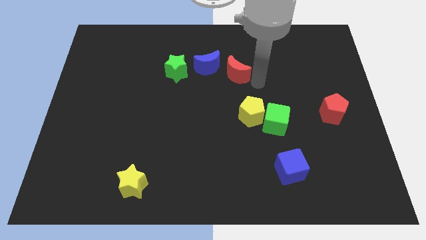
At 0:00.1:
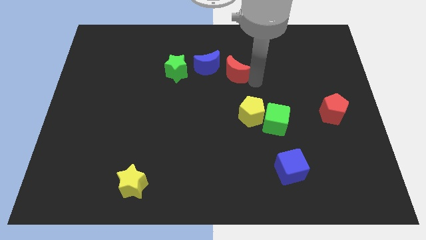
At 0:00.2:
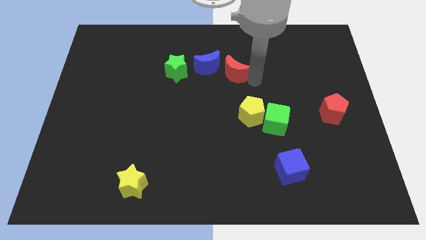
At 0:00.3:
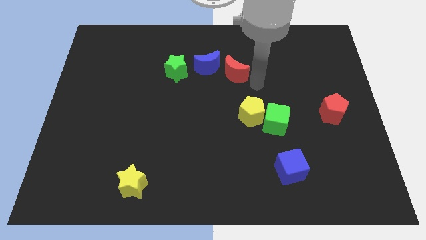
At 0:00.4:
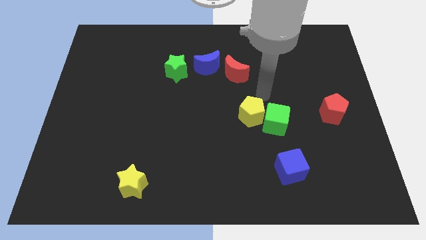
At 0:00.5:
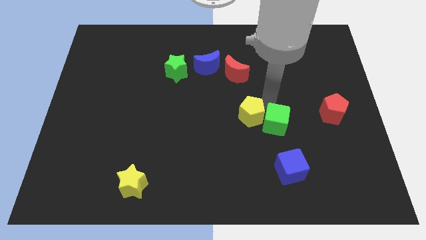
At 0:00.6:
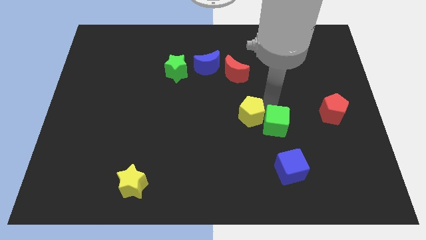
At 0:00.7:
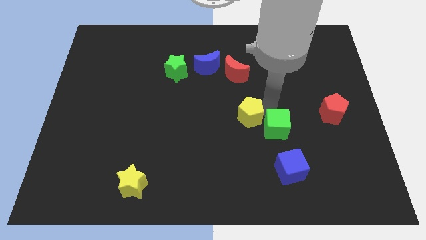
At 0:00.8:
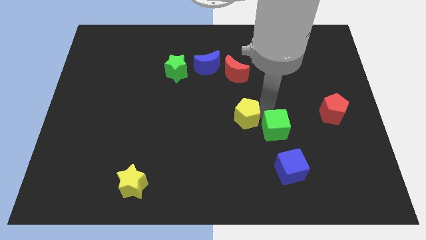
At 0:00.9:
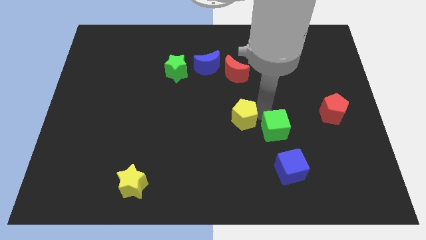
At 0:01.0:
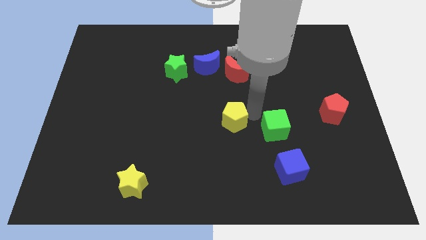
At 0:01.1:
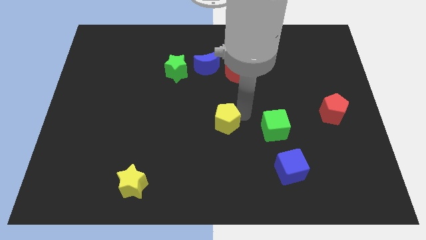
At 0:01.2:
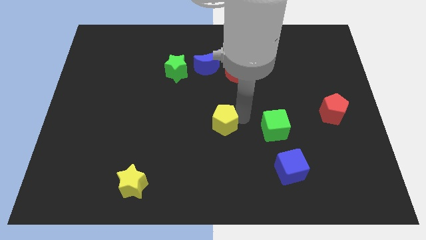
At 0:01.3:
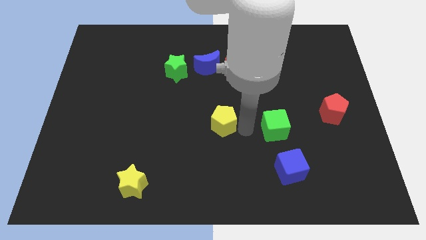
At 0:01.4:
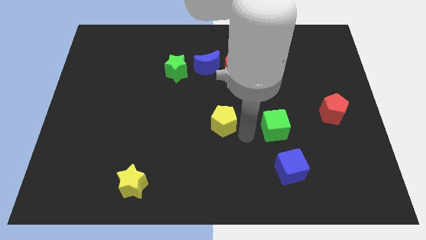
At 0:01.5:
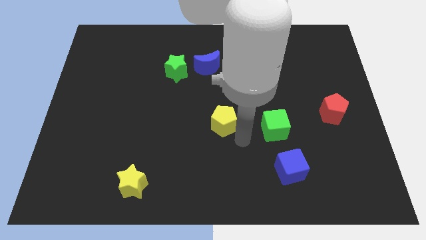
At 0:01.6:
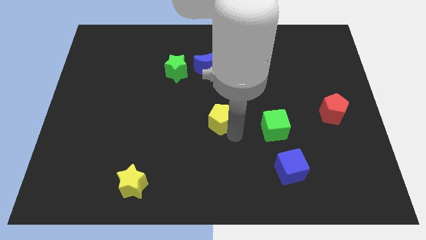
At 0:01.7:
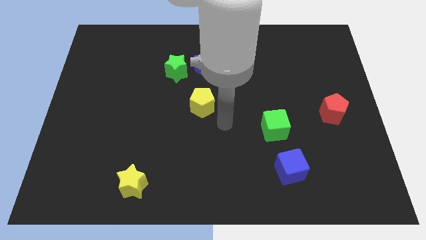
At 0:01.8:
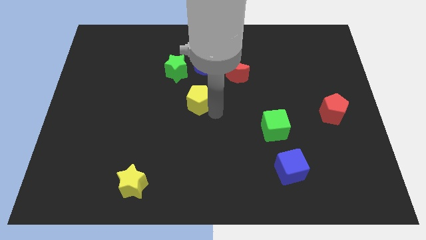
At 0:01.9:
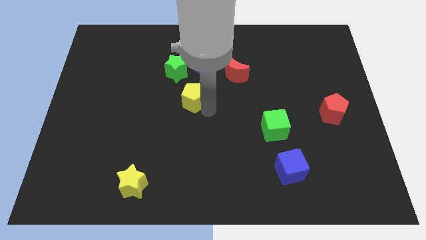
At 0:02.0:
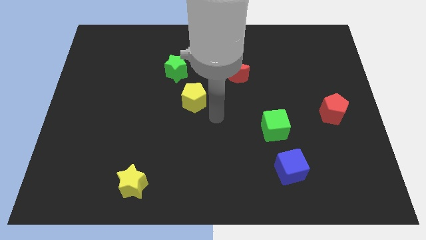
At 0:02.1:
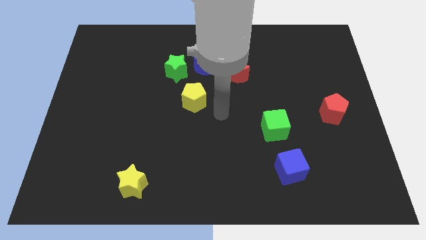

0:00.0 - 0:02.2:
move the yellow pentagon below the green star

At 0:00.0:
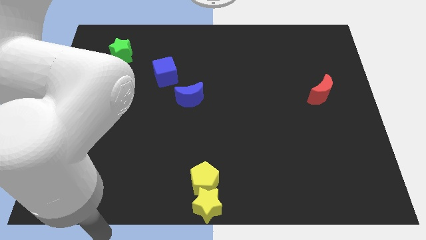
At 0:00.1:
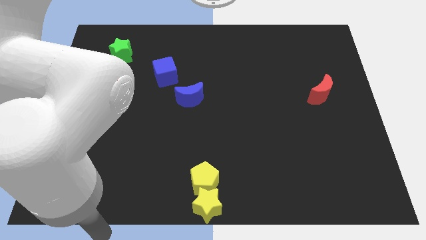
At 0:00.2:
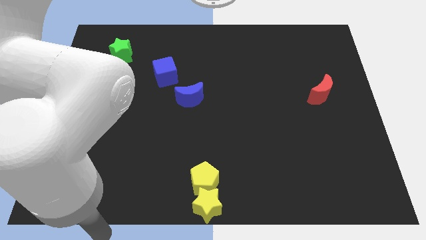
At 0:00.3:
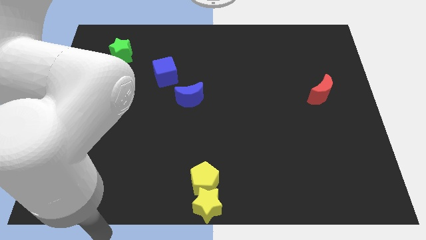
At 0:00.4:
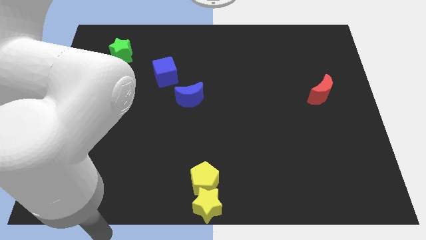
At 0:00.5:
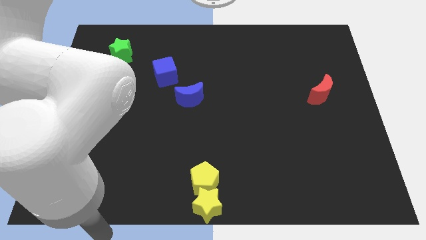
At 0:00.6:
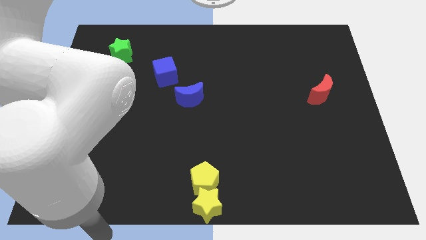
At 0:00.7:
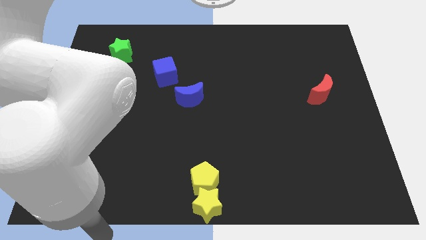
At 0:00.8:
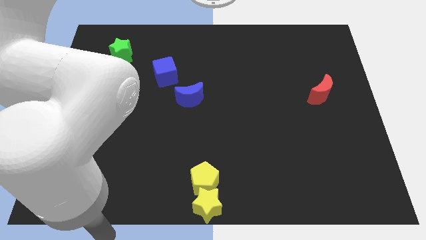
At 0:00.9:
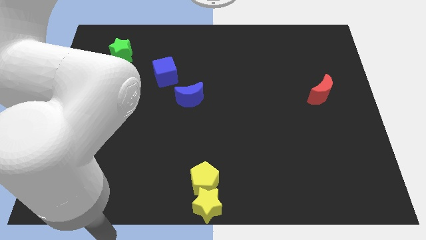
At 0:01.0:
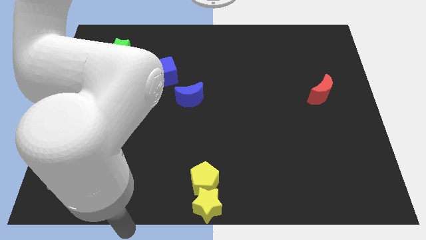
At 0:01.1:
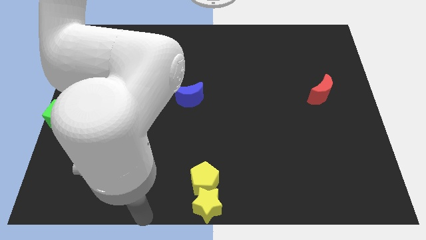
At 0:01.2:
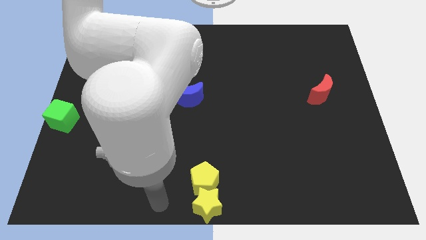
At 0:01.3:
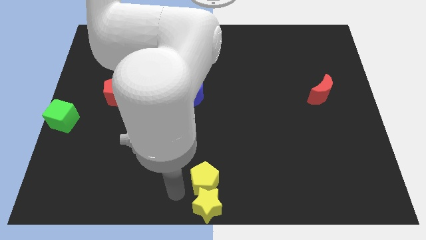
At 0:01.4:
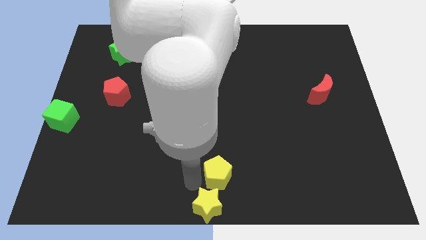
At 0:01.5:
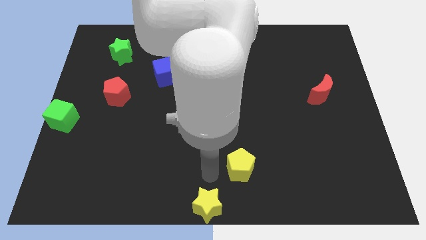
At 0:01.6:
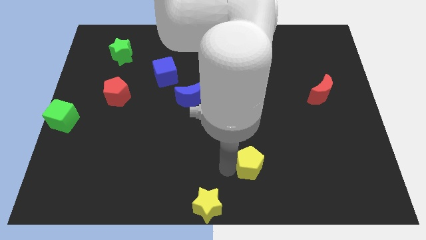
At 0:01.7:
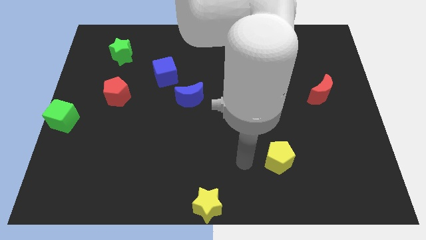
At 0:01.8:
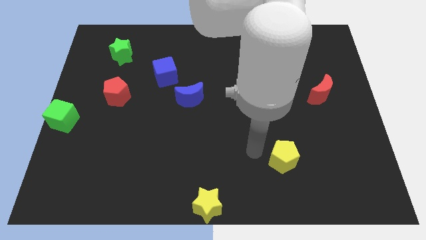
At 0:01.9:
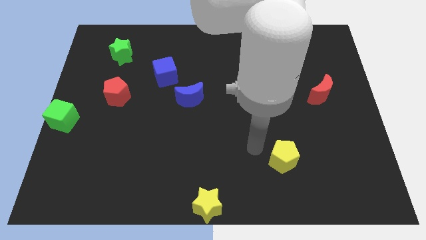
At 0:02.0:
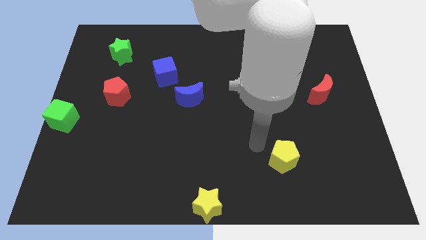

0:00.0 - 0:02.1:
separate yellow pentagon from the yellow star

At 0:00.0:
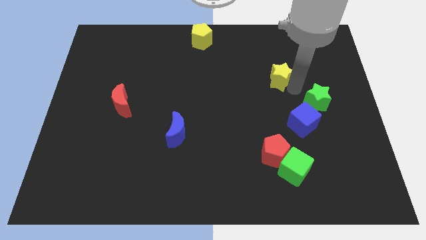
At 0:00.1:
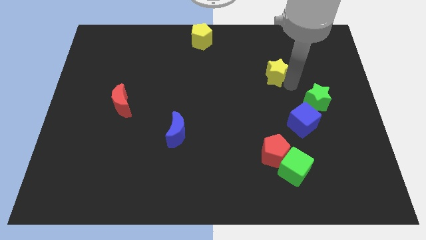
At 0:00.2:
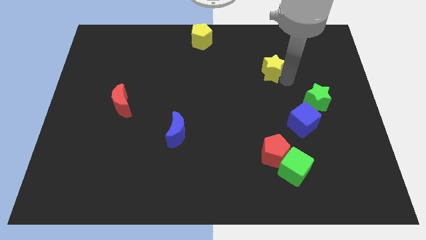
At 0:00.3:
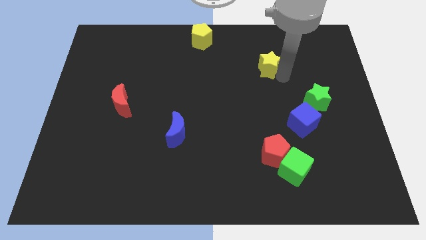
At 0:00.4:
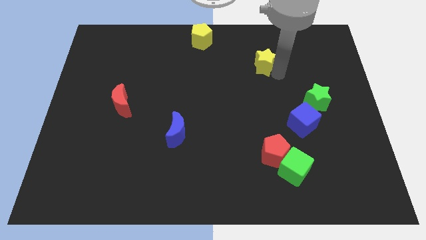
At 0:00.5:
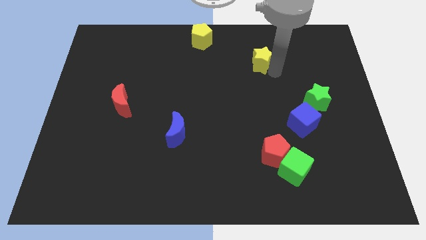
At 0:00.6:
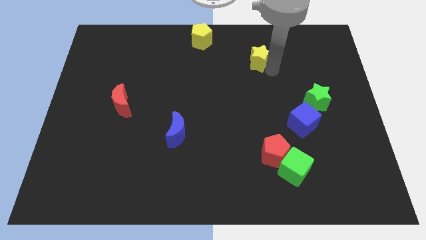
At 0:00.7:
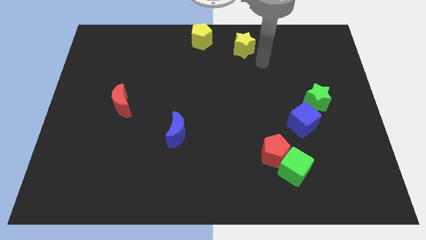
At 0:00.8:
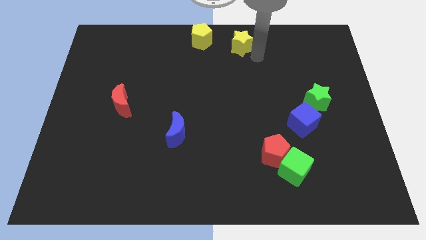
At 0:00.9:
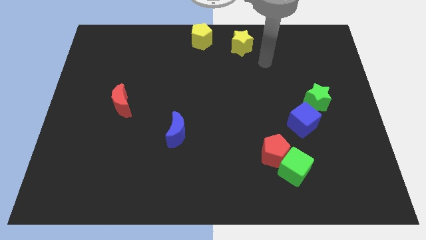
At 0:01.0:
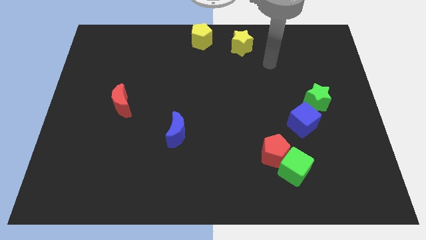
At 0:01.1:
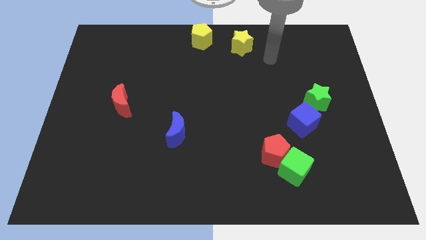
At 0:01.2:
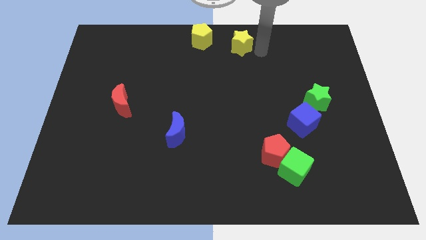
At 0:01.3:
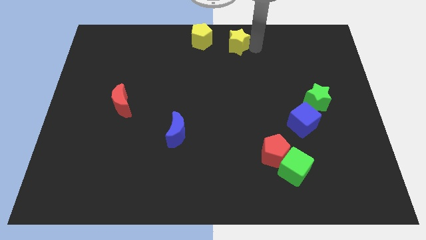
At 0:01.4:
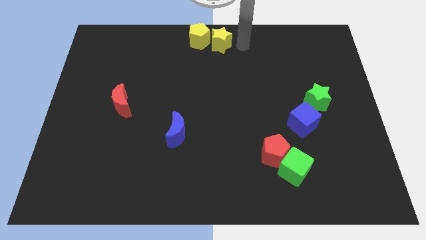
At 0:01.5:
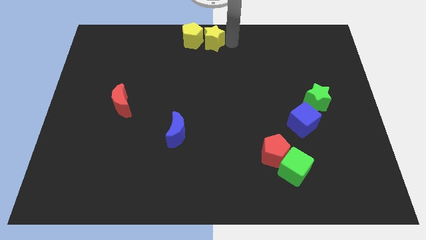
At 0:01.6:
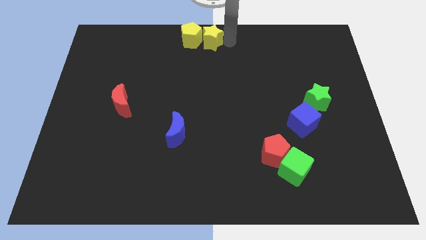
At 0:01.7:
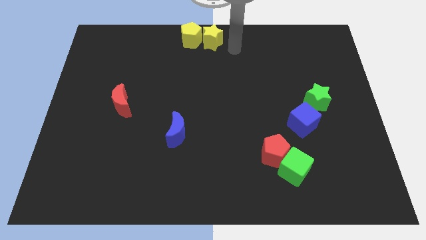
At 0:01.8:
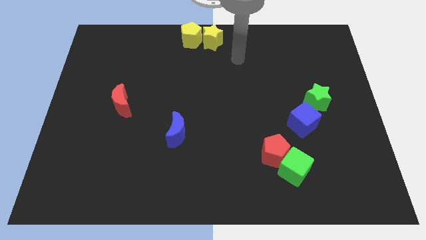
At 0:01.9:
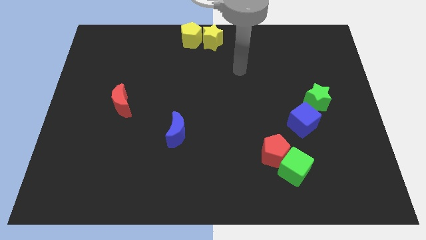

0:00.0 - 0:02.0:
move yellow star into yellow pentagon

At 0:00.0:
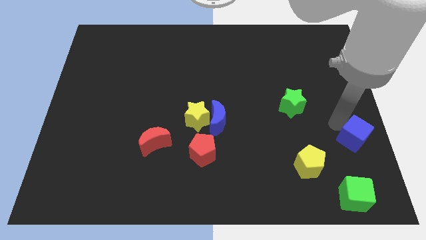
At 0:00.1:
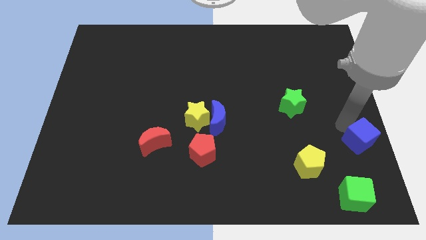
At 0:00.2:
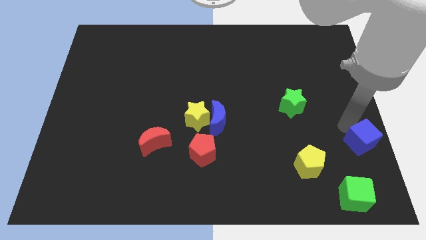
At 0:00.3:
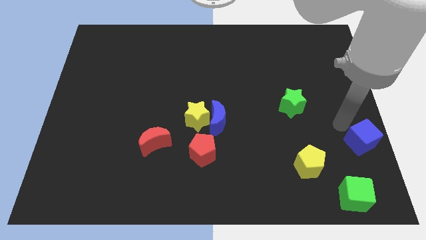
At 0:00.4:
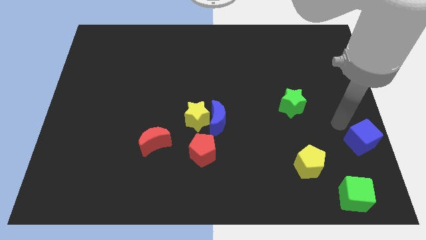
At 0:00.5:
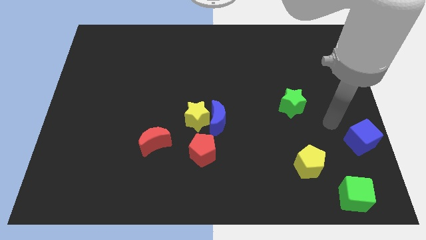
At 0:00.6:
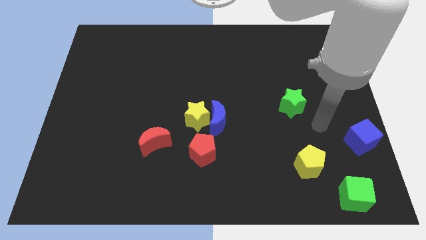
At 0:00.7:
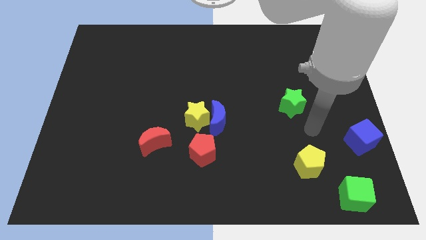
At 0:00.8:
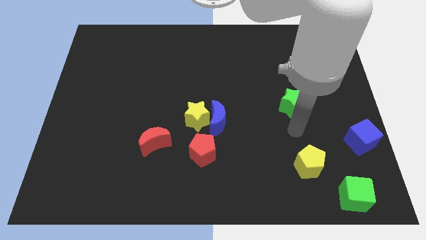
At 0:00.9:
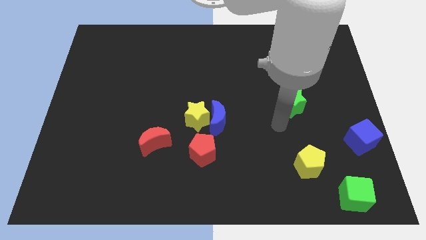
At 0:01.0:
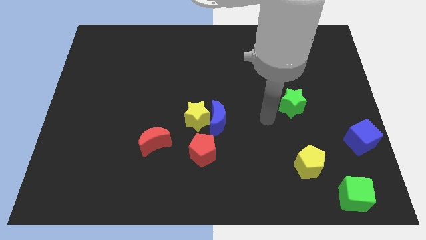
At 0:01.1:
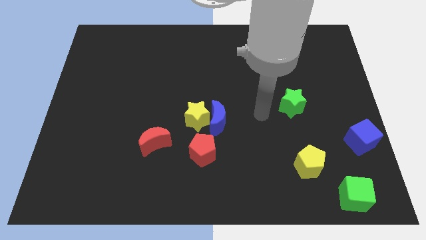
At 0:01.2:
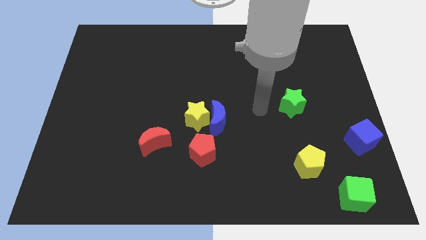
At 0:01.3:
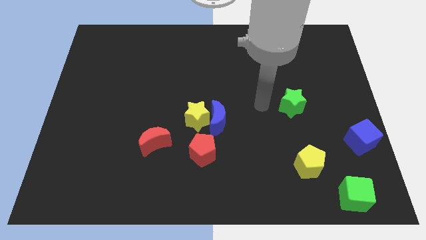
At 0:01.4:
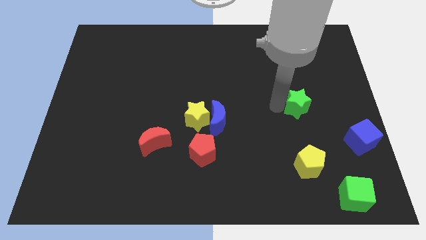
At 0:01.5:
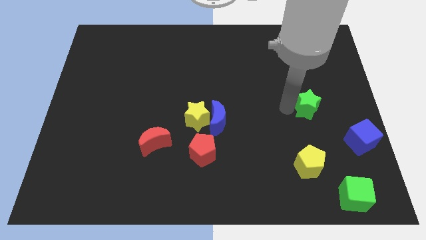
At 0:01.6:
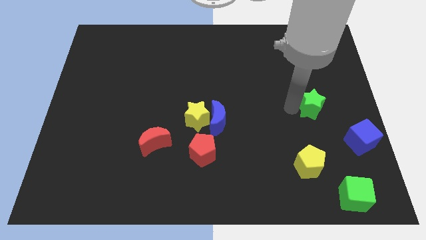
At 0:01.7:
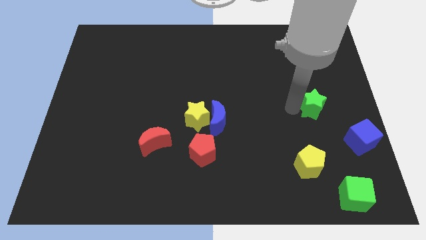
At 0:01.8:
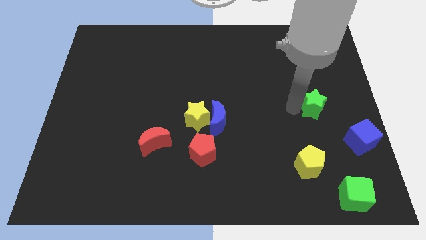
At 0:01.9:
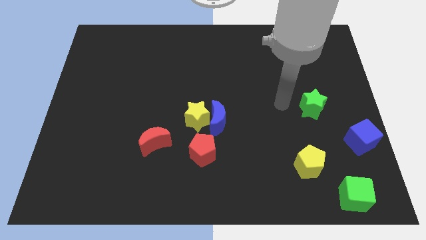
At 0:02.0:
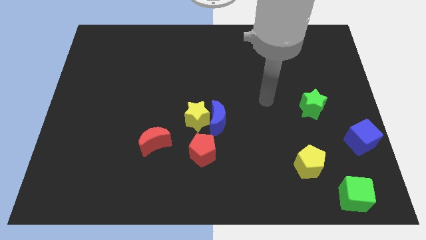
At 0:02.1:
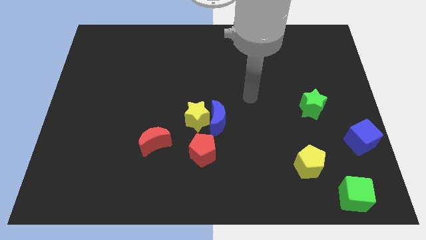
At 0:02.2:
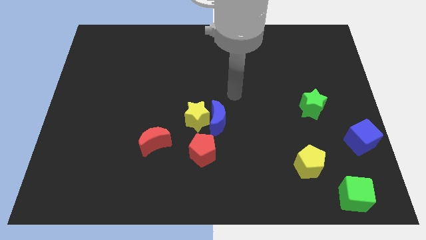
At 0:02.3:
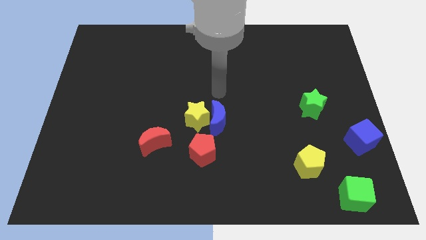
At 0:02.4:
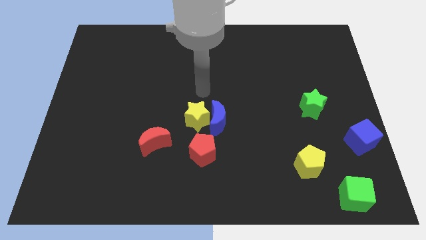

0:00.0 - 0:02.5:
place the green star above the yellow pentagon
